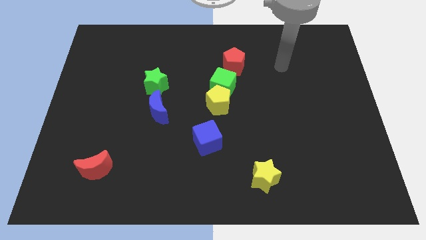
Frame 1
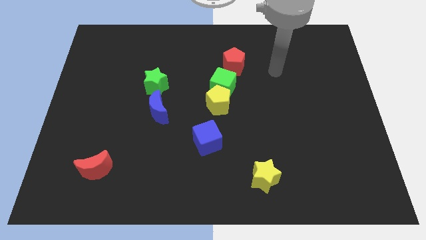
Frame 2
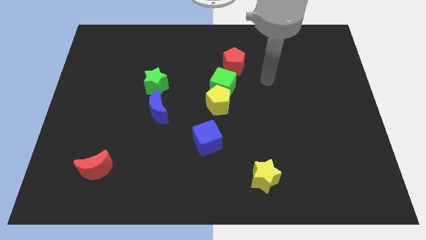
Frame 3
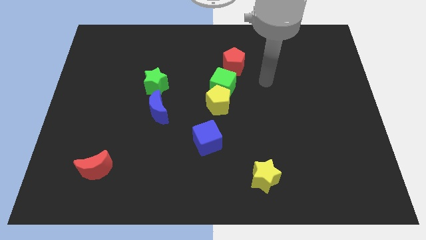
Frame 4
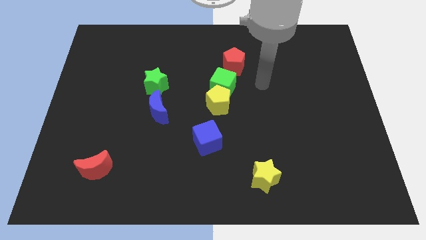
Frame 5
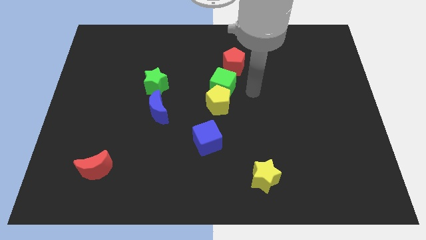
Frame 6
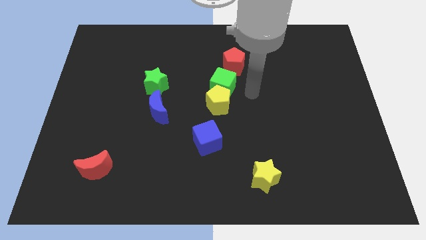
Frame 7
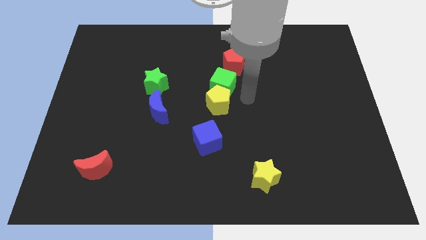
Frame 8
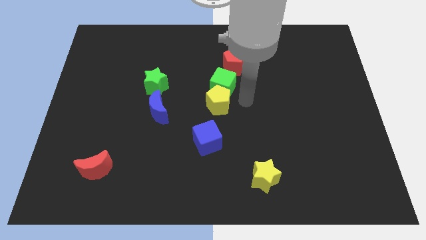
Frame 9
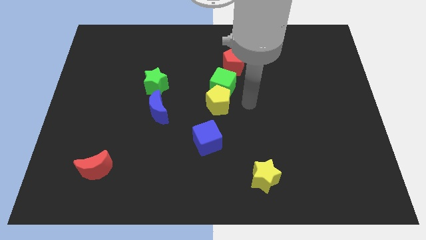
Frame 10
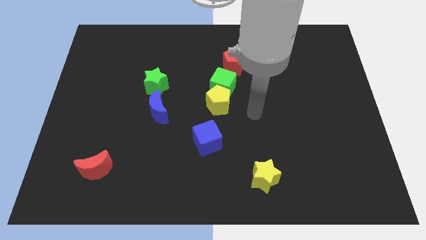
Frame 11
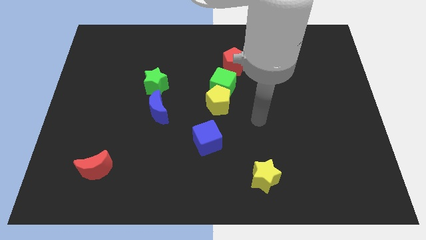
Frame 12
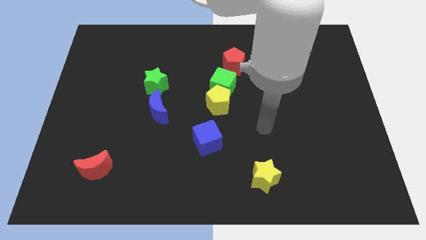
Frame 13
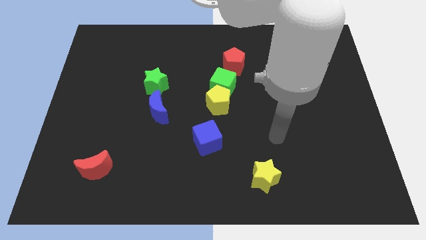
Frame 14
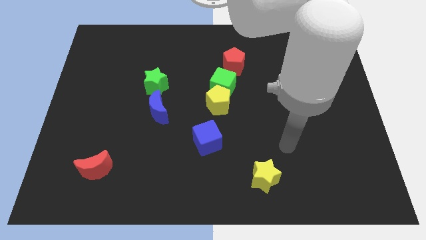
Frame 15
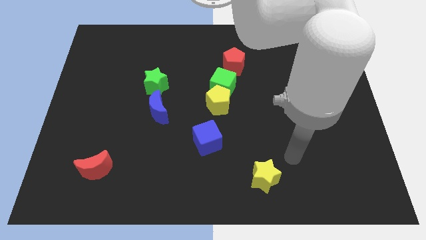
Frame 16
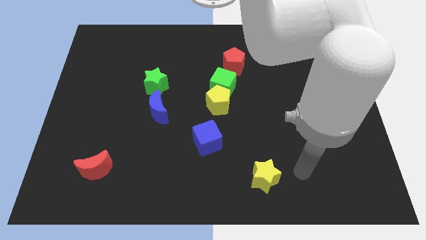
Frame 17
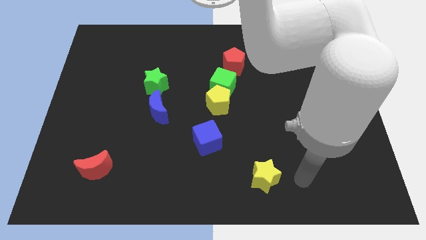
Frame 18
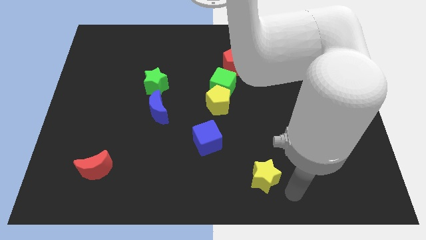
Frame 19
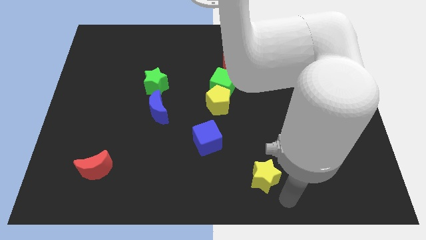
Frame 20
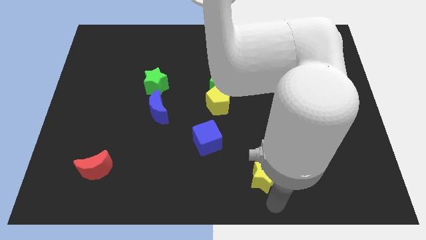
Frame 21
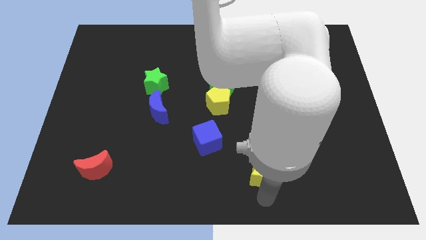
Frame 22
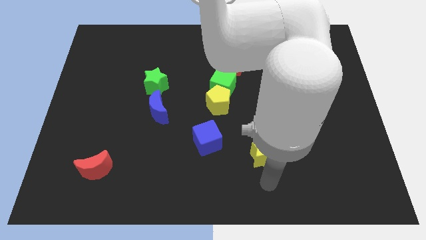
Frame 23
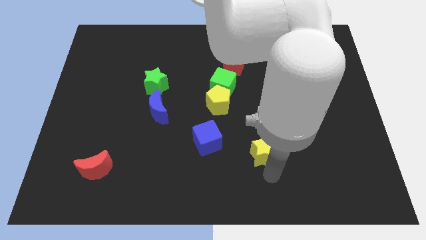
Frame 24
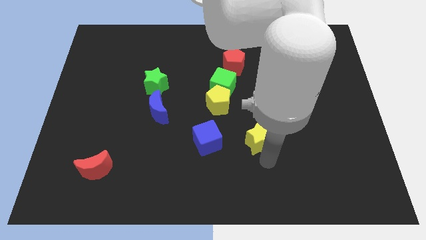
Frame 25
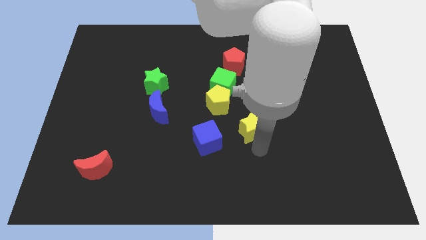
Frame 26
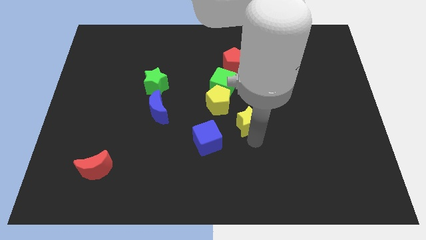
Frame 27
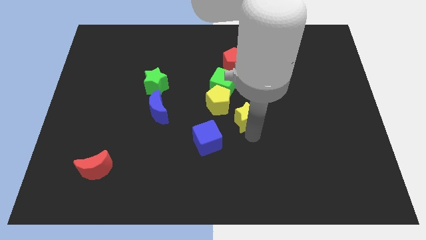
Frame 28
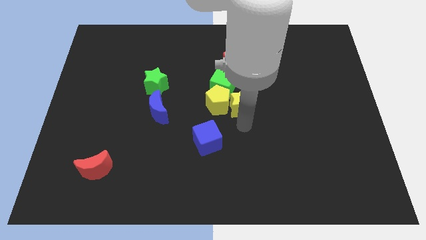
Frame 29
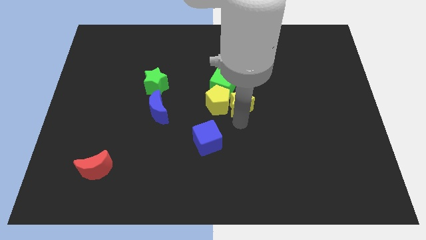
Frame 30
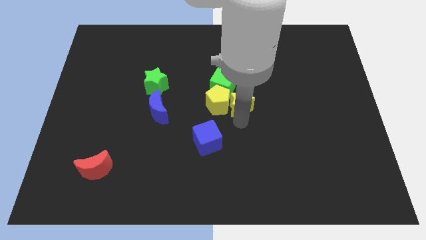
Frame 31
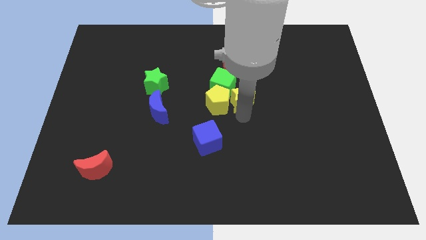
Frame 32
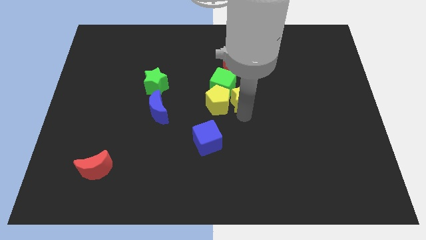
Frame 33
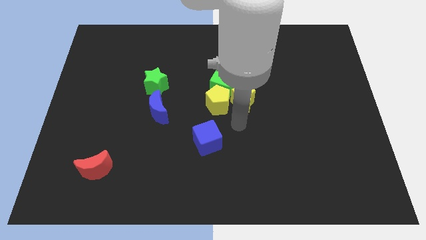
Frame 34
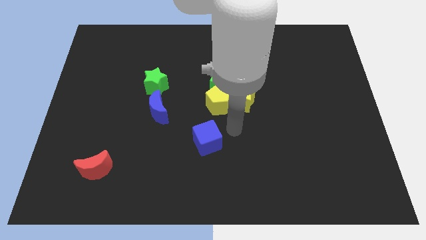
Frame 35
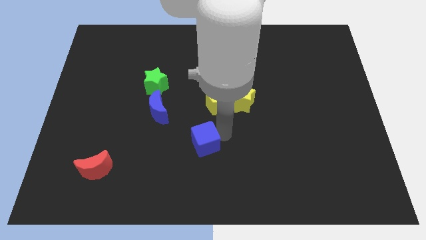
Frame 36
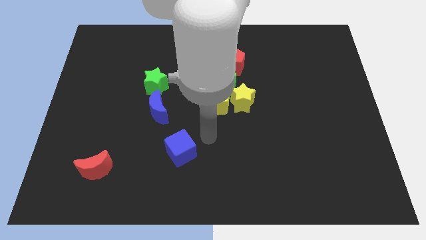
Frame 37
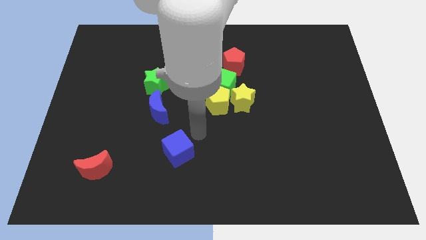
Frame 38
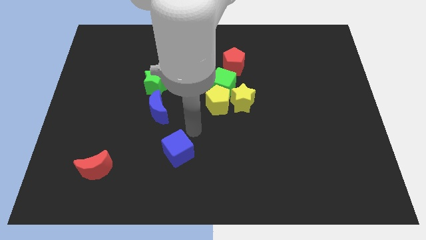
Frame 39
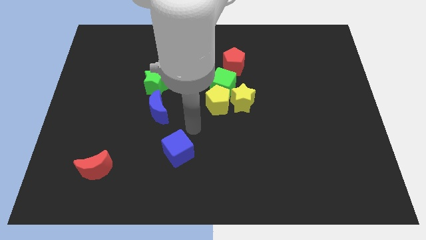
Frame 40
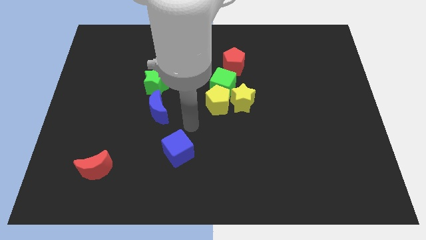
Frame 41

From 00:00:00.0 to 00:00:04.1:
move the yellow star to the right of the yellow pentagon

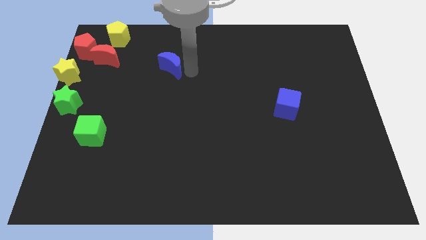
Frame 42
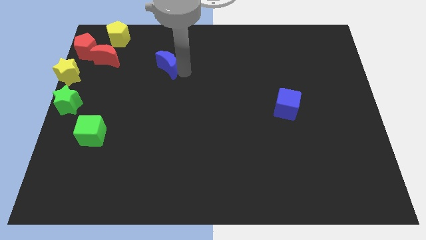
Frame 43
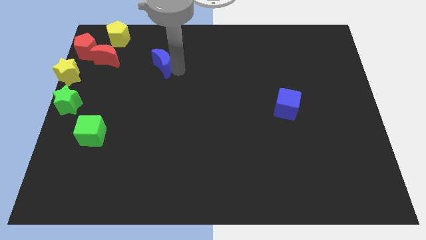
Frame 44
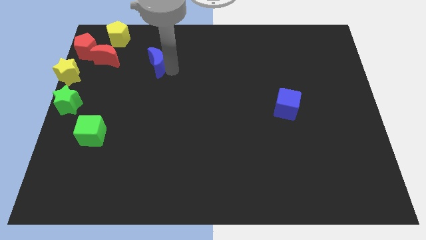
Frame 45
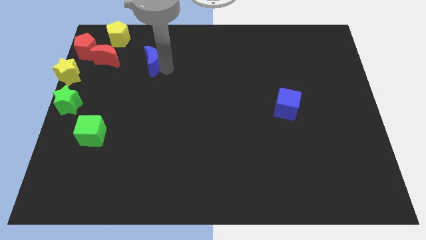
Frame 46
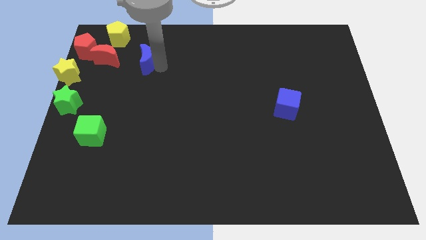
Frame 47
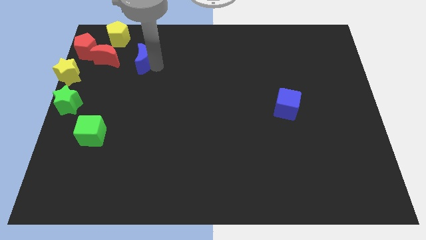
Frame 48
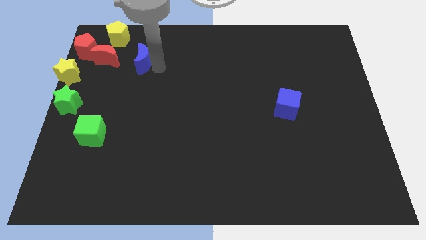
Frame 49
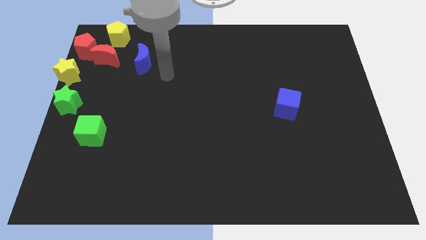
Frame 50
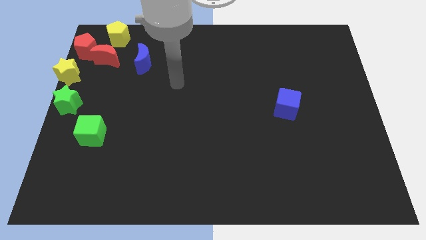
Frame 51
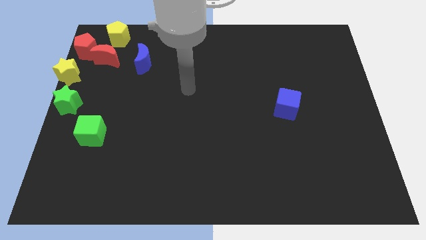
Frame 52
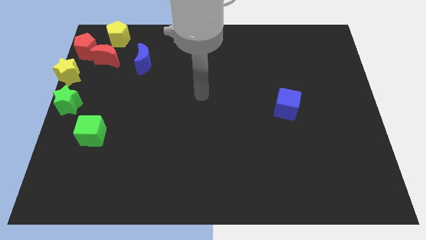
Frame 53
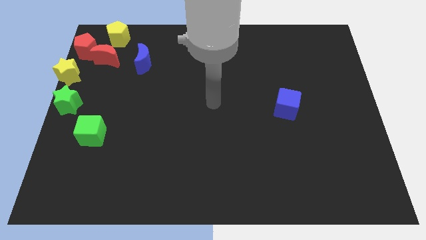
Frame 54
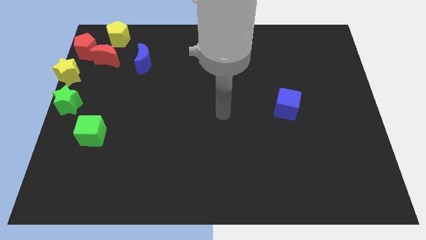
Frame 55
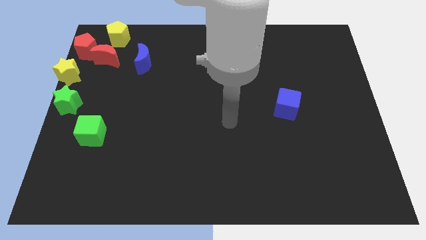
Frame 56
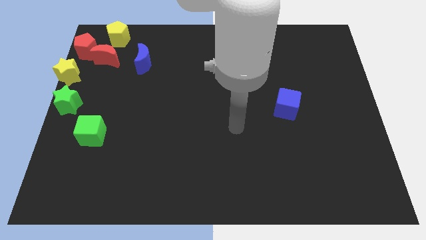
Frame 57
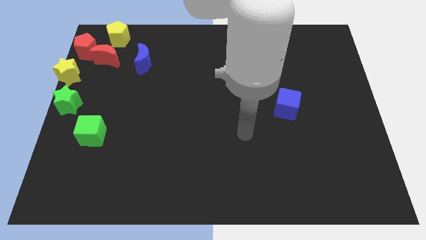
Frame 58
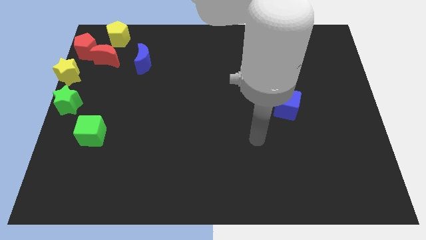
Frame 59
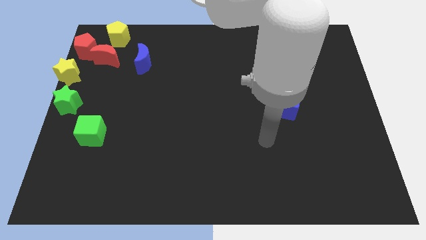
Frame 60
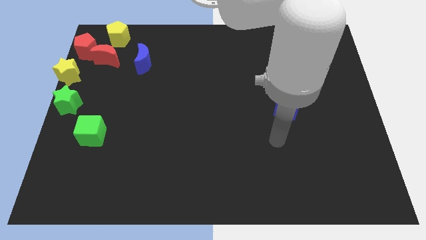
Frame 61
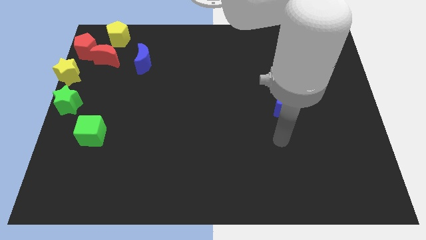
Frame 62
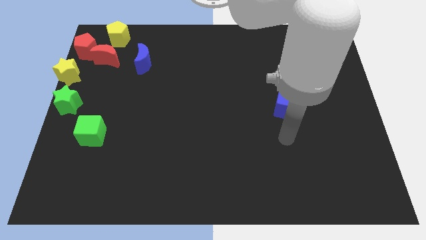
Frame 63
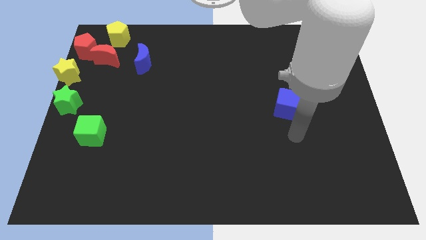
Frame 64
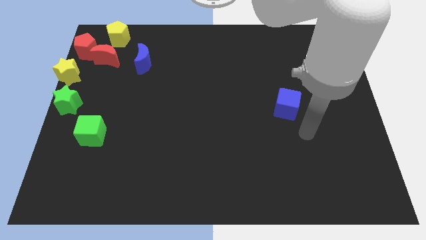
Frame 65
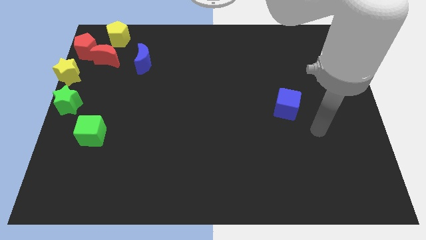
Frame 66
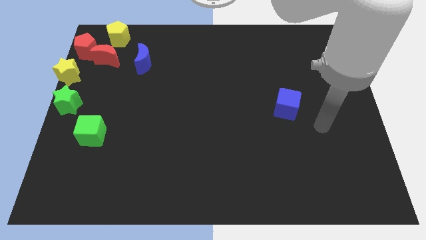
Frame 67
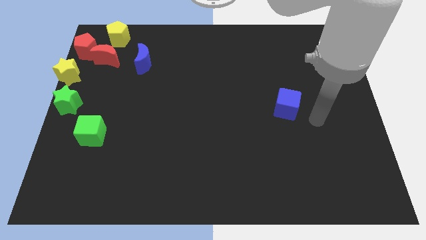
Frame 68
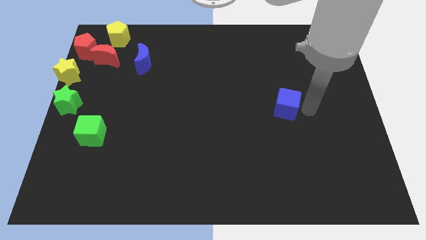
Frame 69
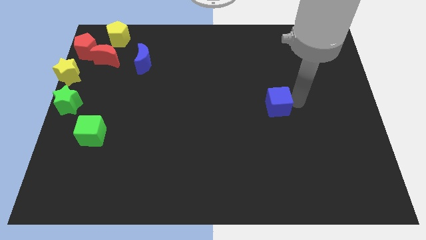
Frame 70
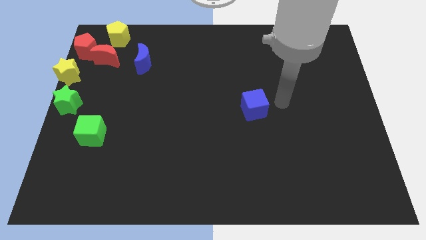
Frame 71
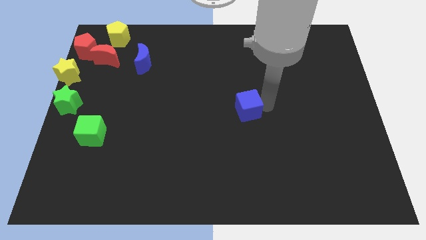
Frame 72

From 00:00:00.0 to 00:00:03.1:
push blue cube slightly towards left

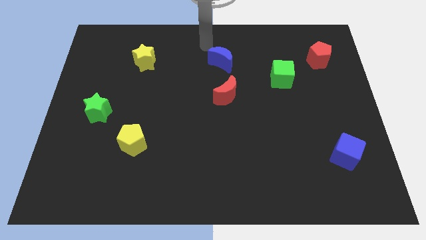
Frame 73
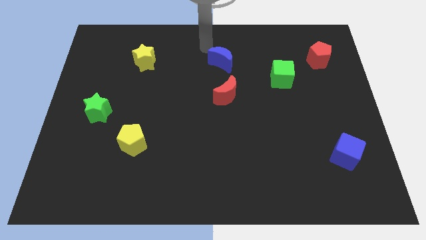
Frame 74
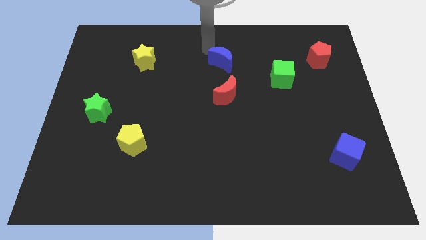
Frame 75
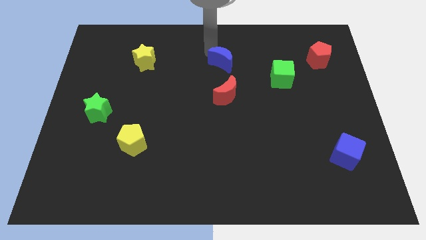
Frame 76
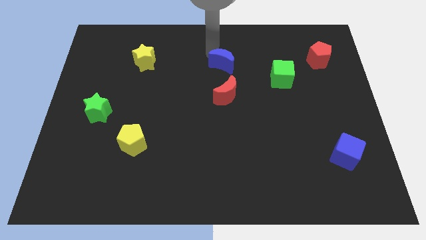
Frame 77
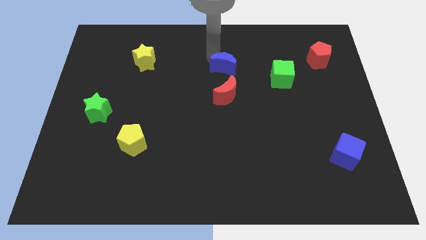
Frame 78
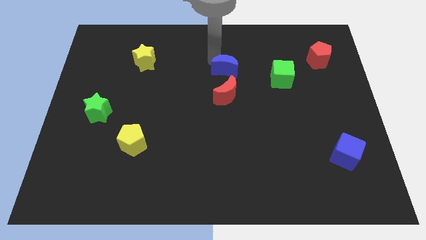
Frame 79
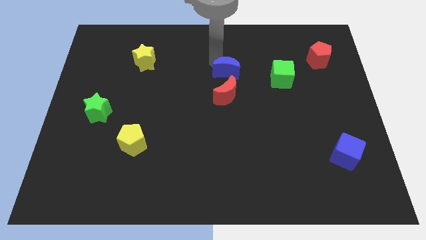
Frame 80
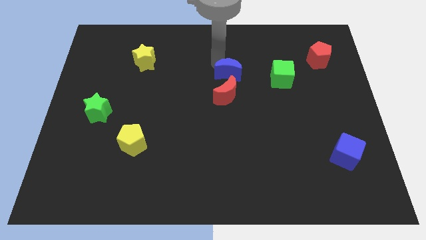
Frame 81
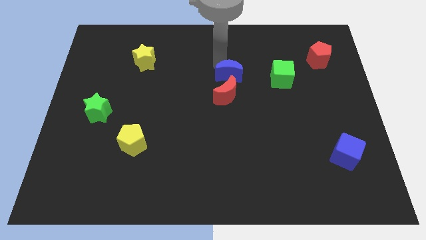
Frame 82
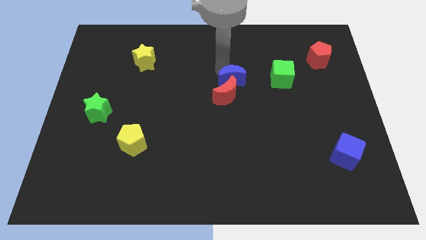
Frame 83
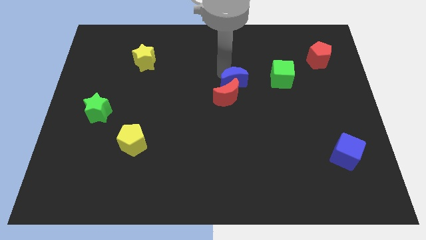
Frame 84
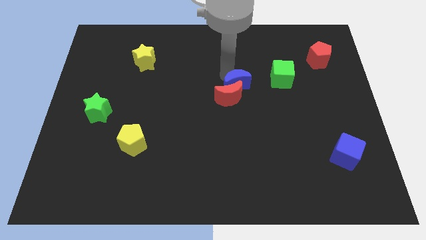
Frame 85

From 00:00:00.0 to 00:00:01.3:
push the blue crescent into the red crescent

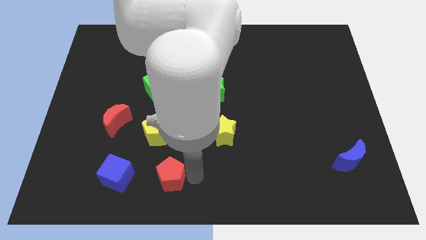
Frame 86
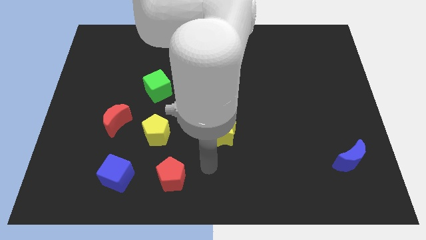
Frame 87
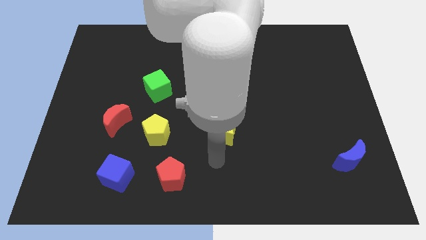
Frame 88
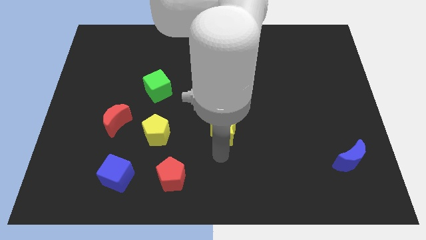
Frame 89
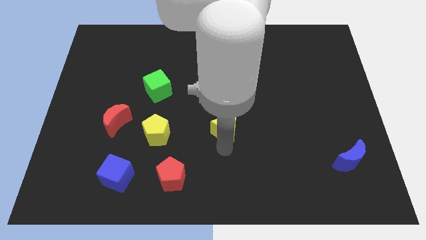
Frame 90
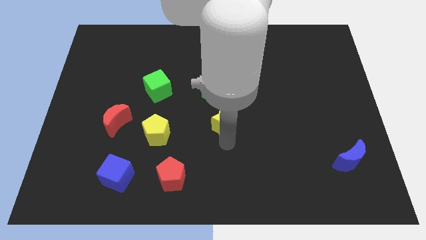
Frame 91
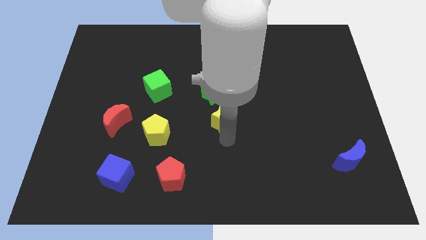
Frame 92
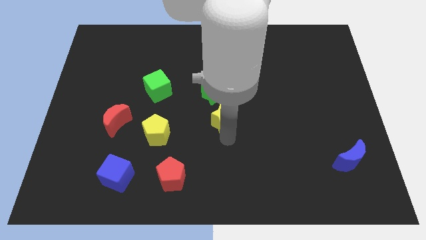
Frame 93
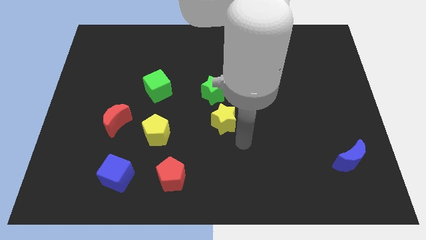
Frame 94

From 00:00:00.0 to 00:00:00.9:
push the yellow star slightly closer to the green star
